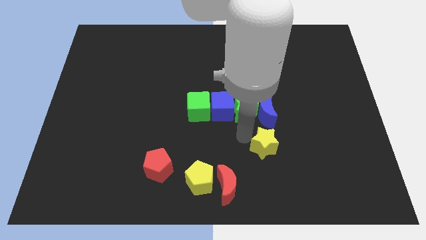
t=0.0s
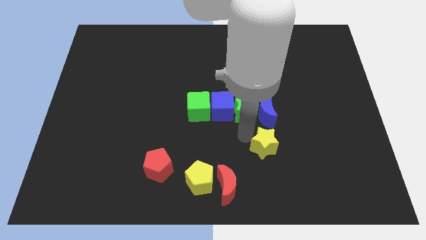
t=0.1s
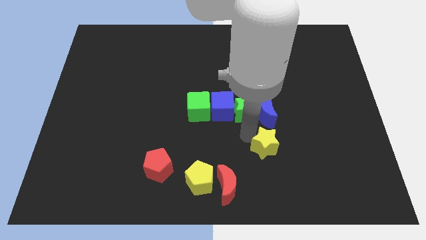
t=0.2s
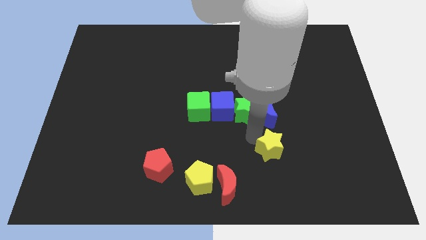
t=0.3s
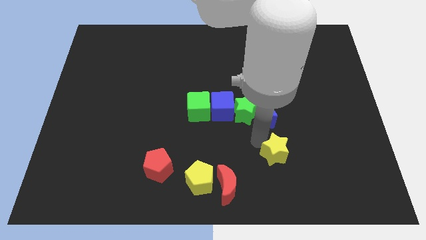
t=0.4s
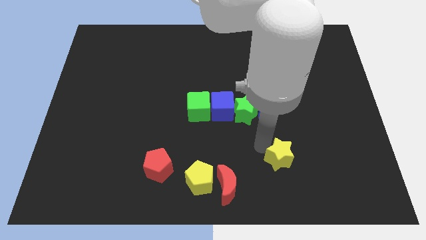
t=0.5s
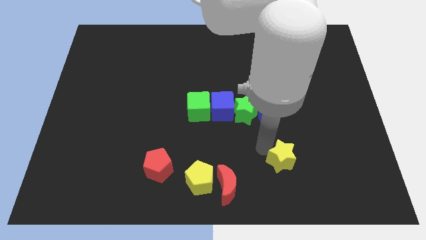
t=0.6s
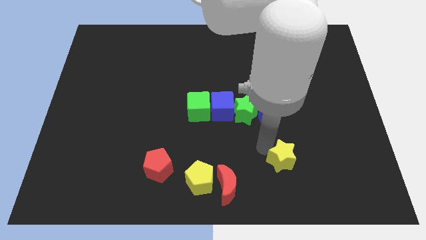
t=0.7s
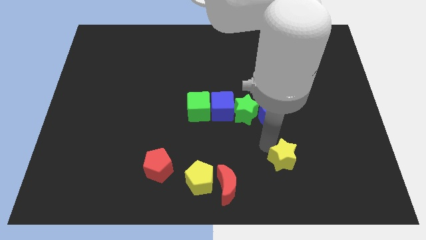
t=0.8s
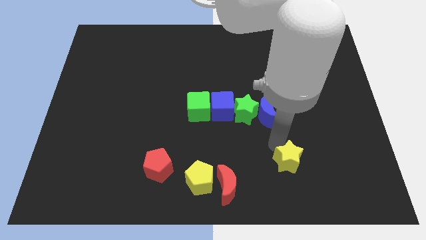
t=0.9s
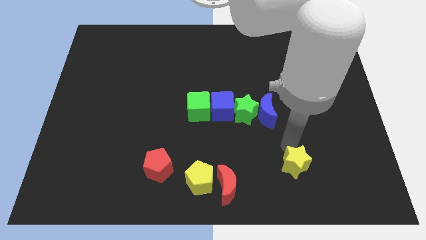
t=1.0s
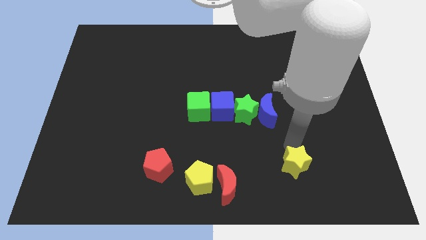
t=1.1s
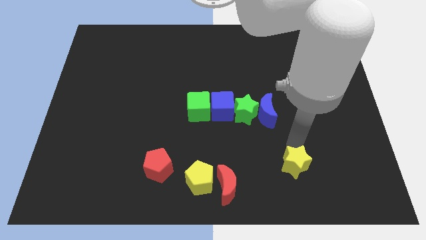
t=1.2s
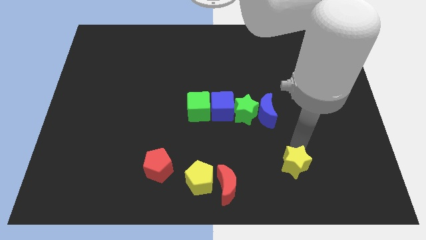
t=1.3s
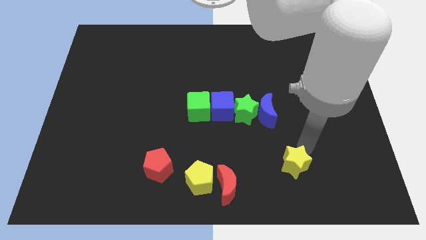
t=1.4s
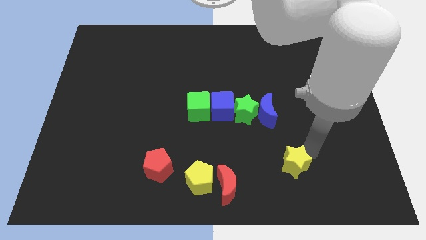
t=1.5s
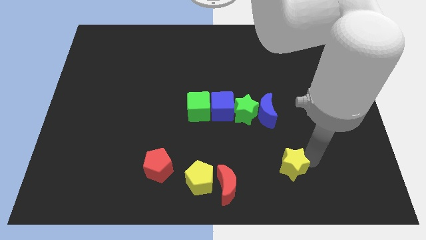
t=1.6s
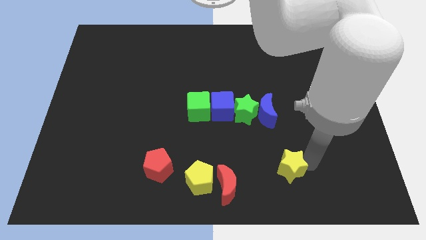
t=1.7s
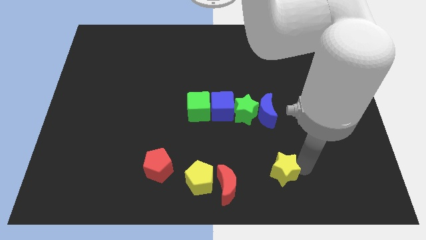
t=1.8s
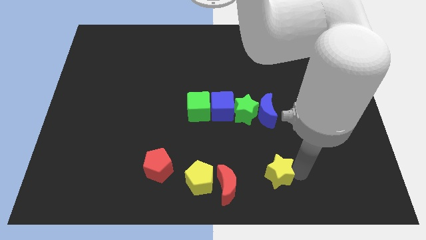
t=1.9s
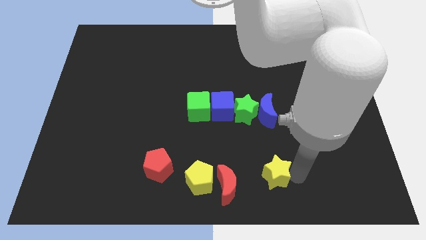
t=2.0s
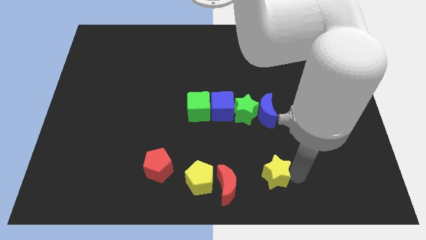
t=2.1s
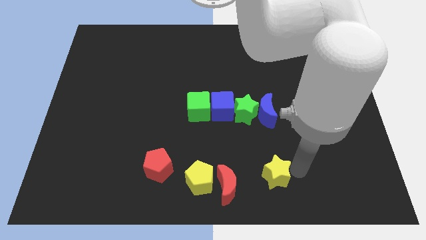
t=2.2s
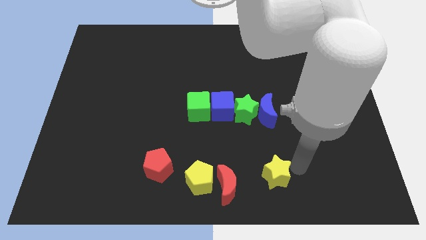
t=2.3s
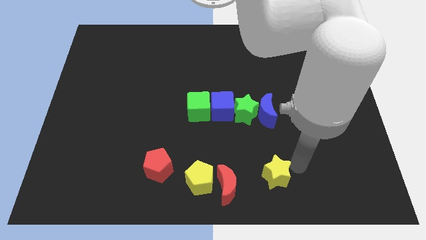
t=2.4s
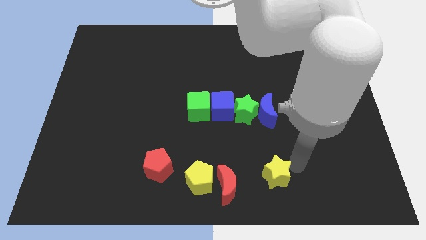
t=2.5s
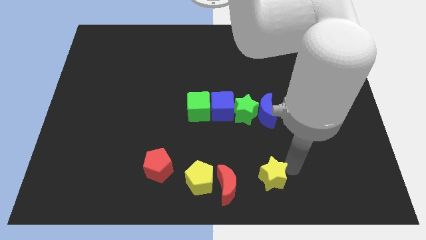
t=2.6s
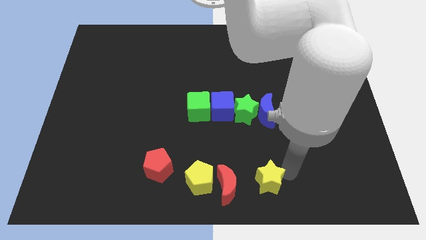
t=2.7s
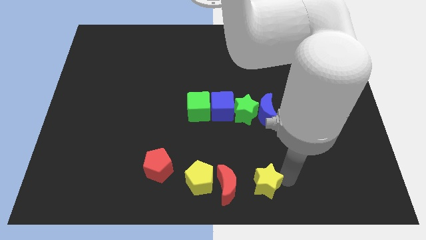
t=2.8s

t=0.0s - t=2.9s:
push the yellow star to the right of the red moon

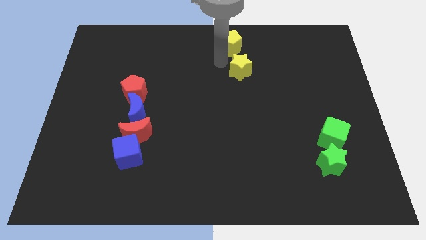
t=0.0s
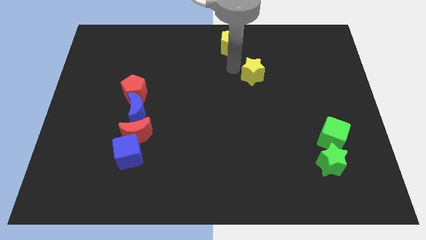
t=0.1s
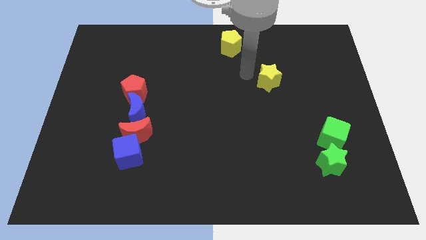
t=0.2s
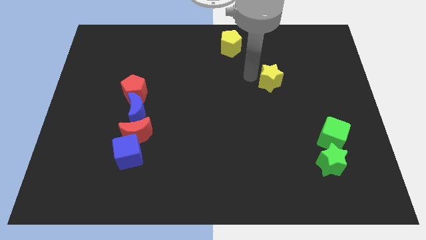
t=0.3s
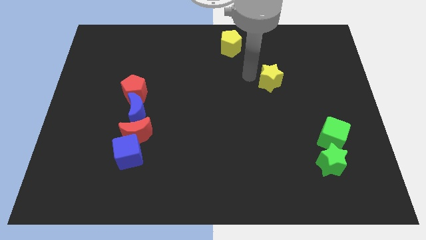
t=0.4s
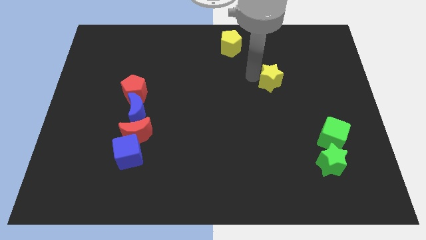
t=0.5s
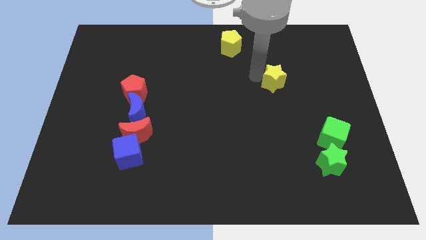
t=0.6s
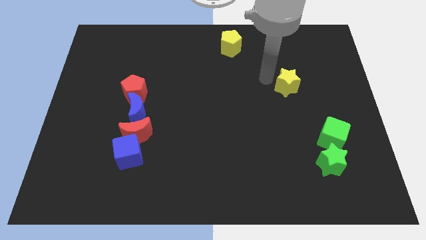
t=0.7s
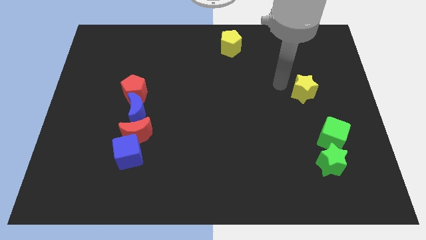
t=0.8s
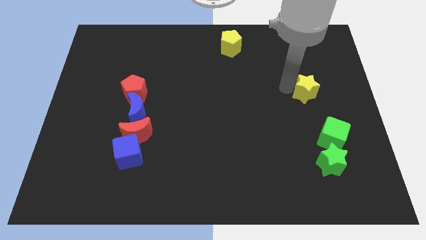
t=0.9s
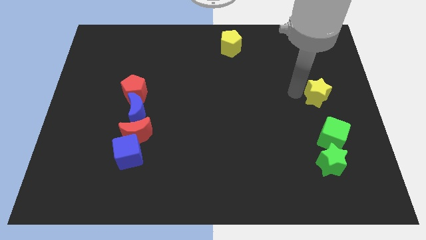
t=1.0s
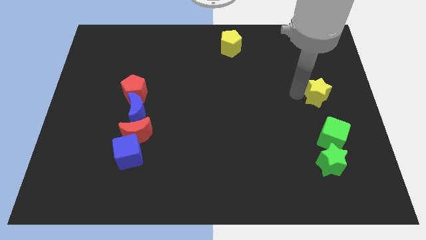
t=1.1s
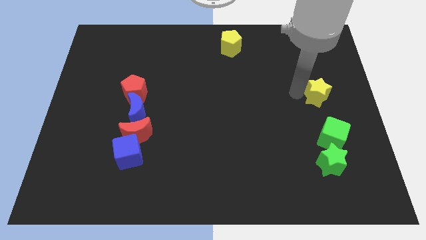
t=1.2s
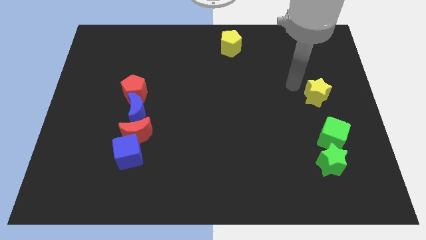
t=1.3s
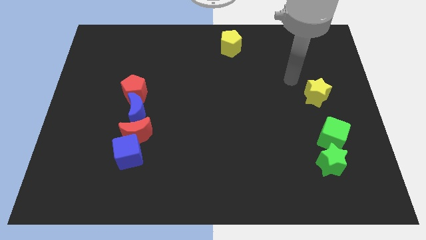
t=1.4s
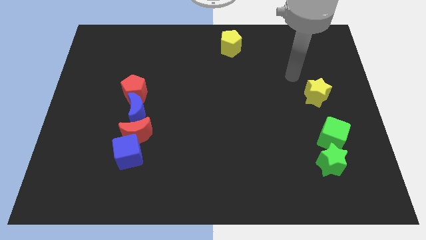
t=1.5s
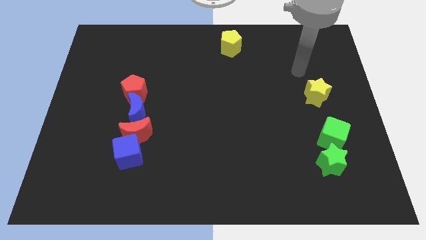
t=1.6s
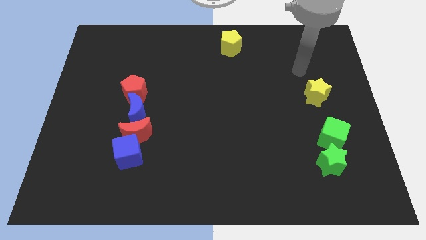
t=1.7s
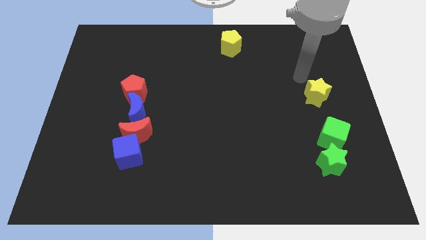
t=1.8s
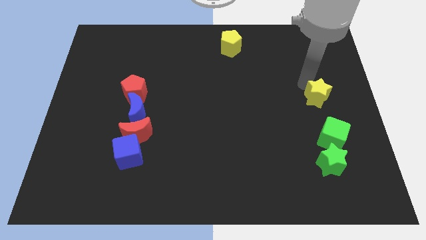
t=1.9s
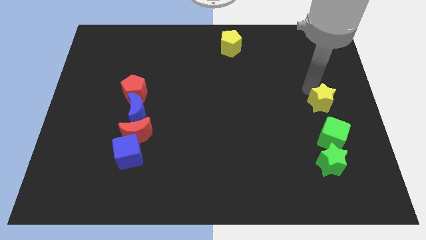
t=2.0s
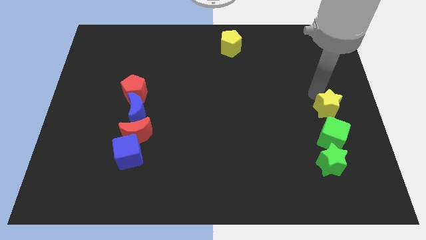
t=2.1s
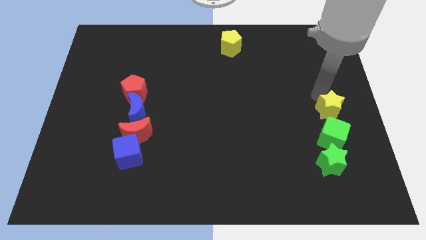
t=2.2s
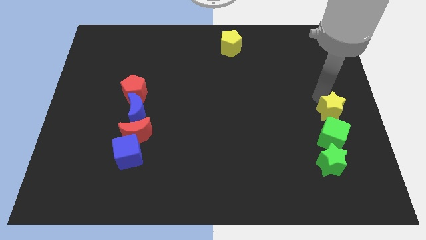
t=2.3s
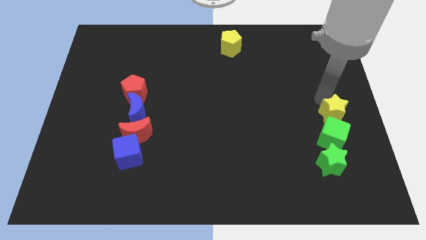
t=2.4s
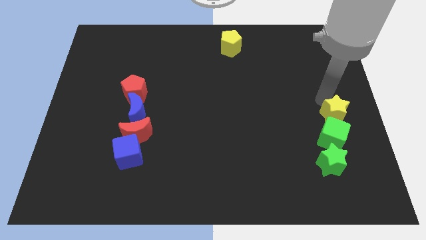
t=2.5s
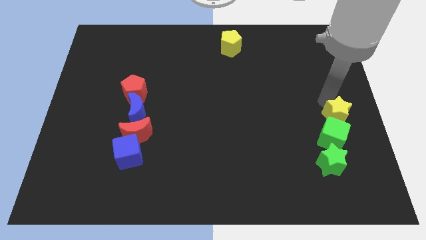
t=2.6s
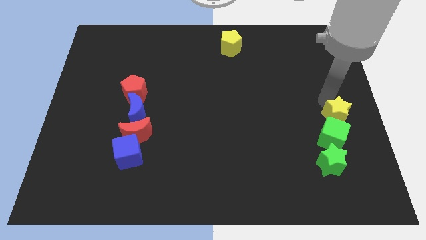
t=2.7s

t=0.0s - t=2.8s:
place the yellow star above the green cube

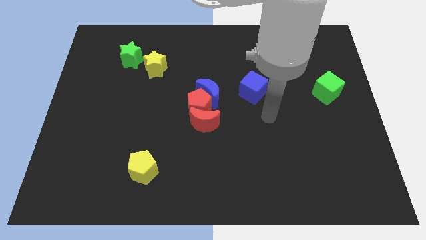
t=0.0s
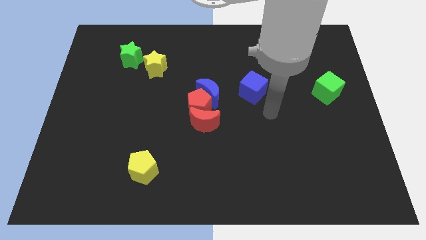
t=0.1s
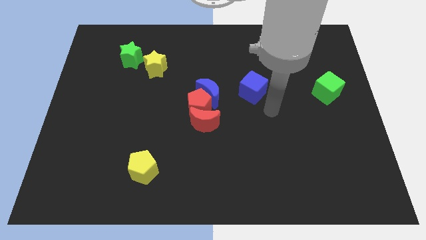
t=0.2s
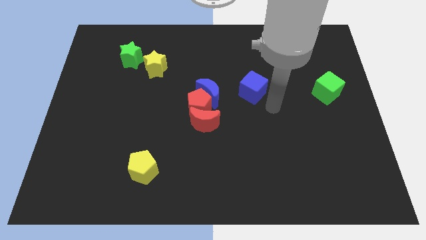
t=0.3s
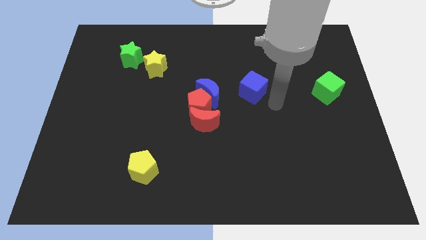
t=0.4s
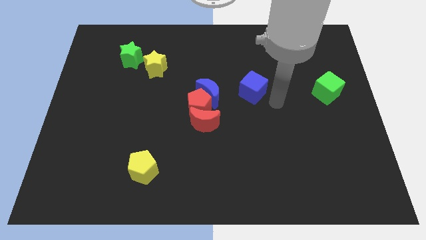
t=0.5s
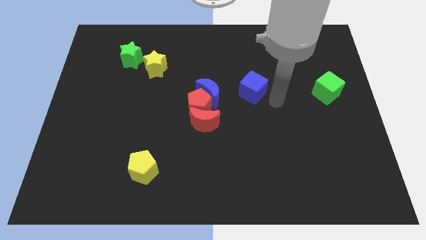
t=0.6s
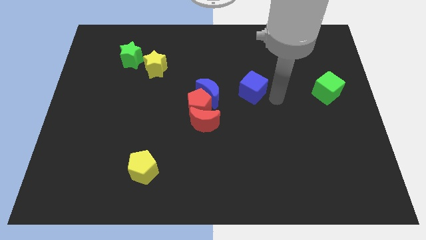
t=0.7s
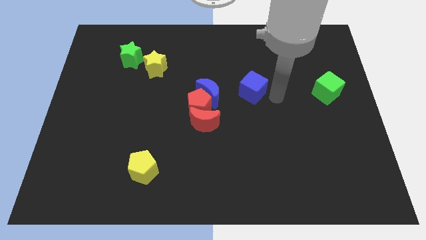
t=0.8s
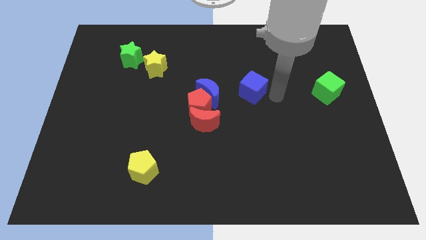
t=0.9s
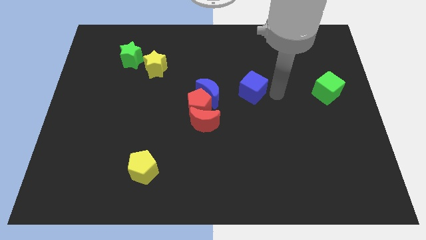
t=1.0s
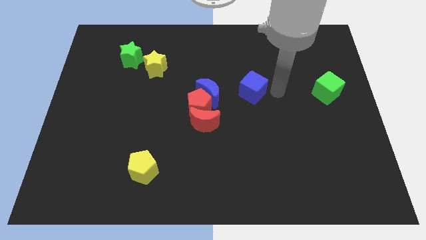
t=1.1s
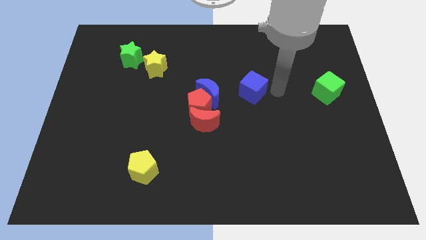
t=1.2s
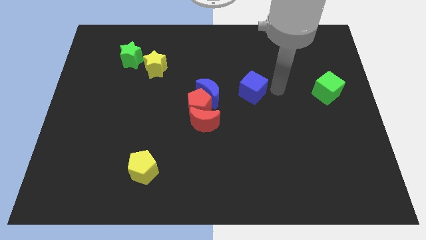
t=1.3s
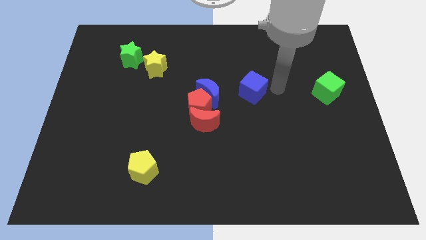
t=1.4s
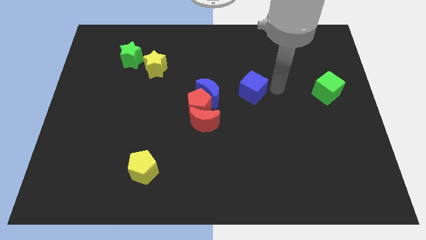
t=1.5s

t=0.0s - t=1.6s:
point your arm to the top right side of the blue cube

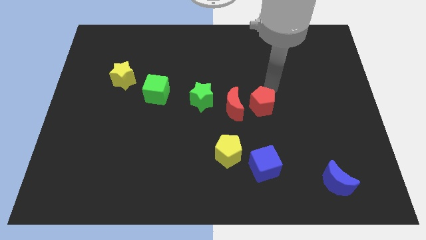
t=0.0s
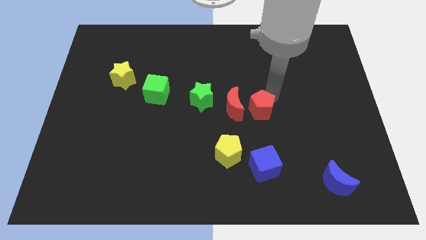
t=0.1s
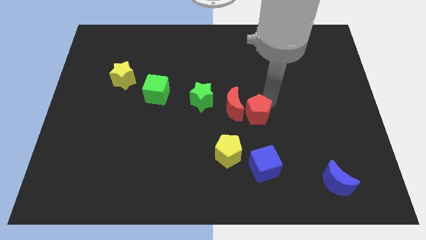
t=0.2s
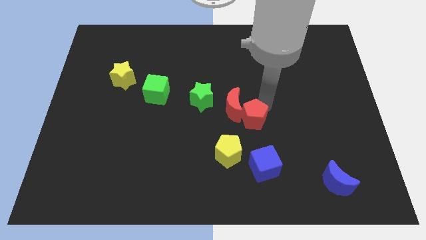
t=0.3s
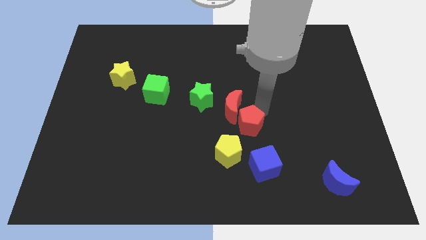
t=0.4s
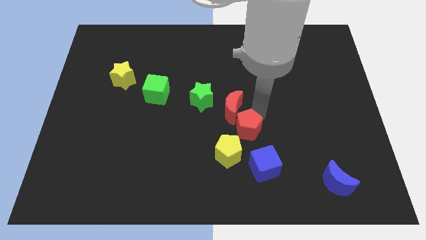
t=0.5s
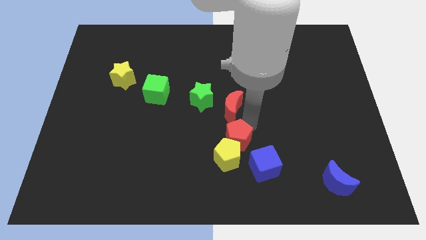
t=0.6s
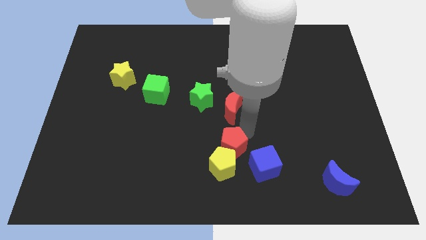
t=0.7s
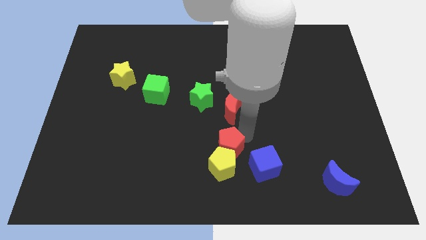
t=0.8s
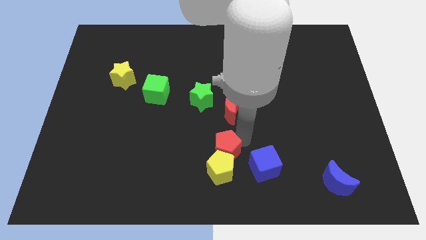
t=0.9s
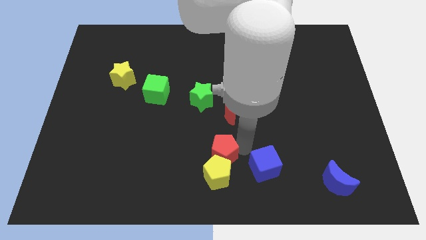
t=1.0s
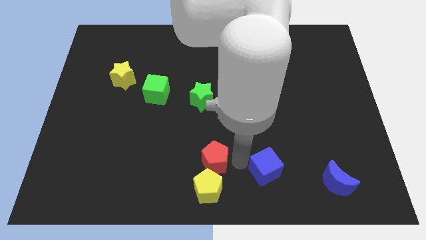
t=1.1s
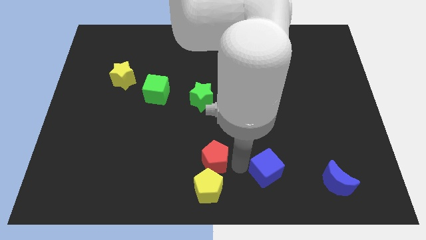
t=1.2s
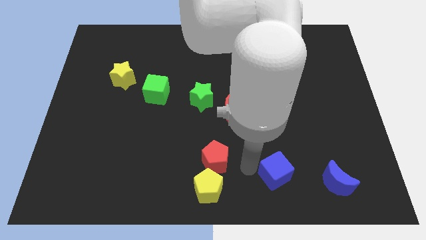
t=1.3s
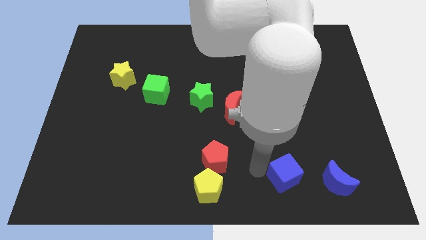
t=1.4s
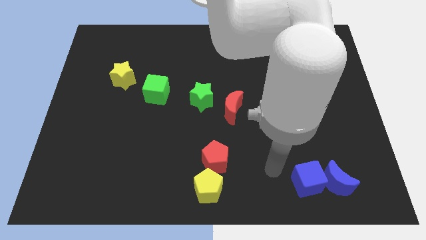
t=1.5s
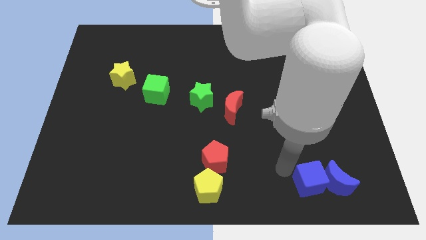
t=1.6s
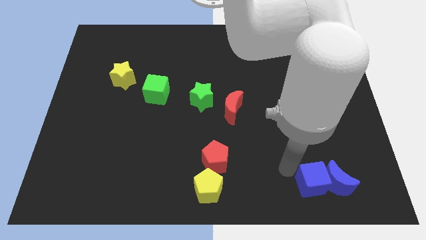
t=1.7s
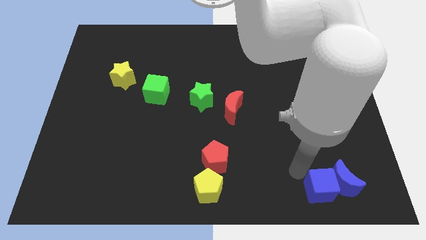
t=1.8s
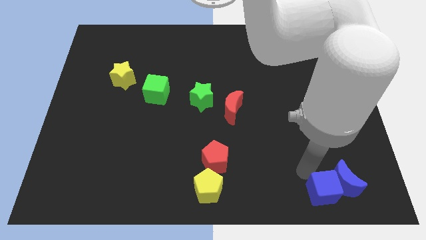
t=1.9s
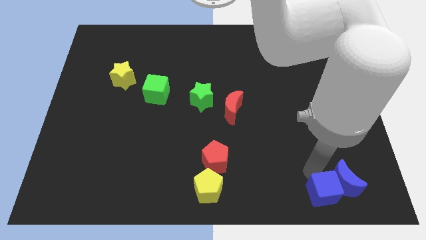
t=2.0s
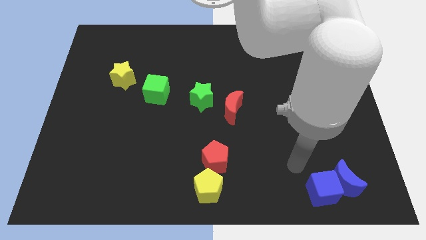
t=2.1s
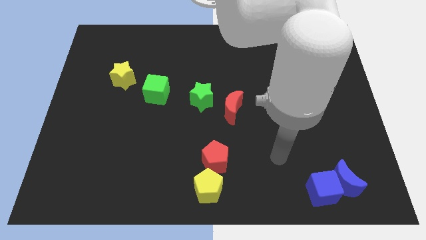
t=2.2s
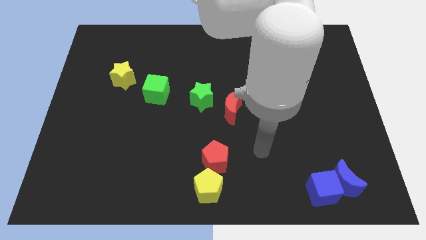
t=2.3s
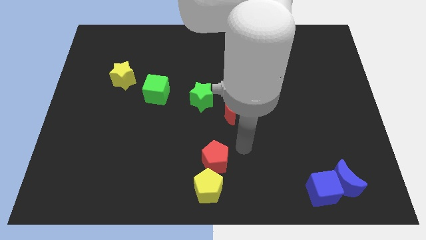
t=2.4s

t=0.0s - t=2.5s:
separate red pentagon from blue blue cube
